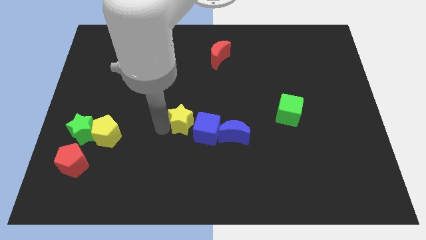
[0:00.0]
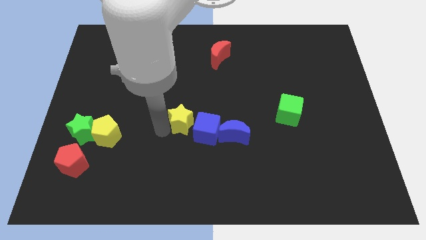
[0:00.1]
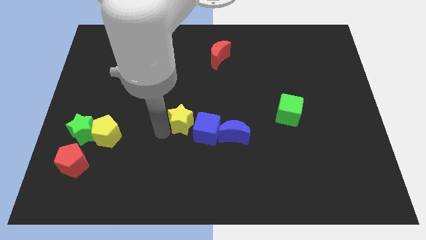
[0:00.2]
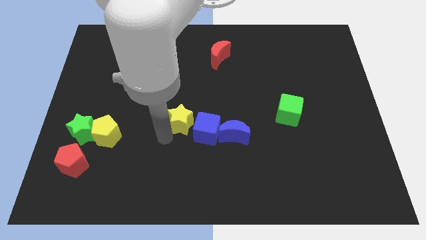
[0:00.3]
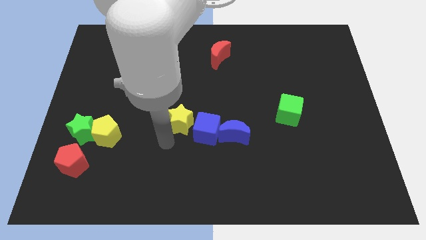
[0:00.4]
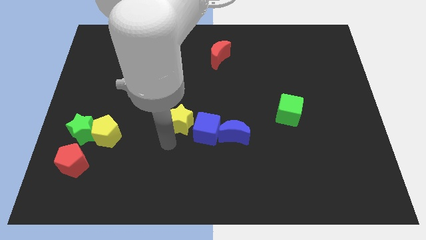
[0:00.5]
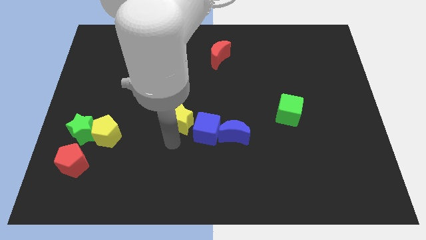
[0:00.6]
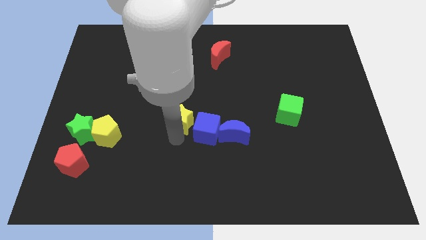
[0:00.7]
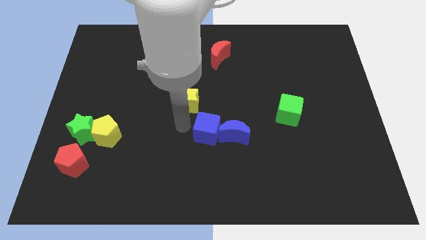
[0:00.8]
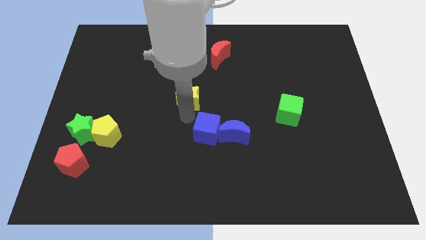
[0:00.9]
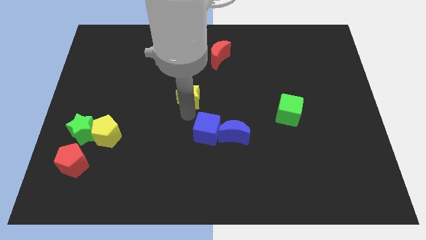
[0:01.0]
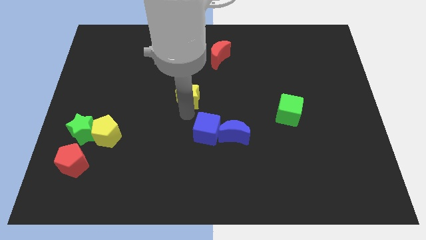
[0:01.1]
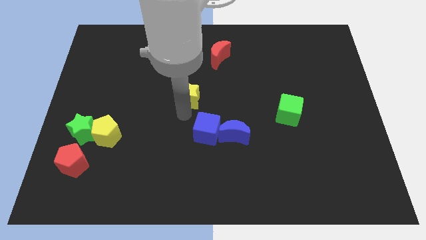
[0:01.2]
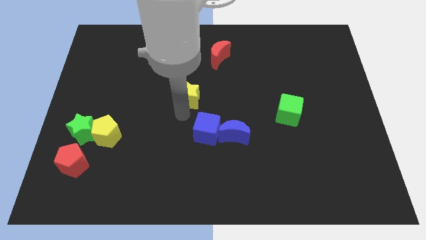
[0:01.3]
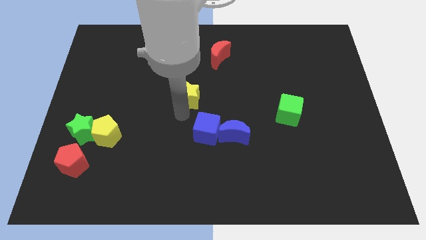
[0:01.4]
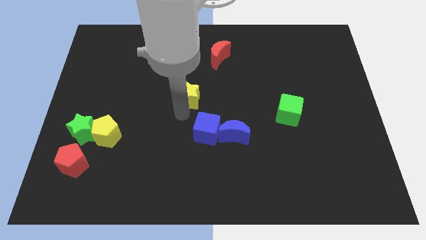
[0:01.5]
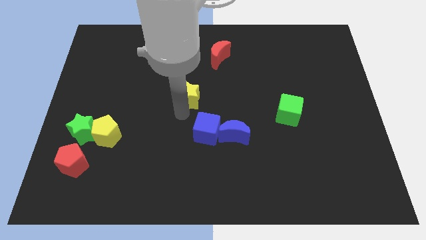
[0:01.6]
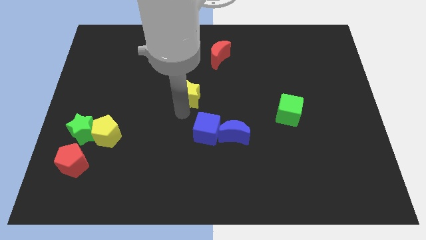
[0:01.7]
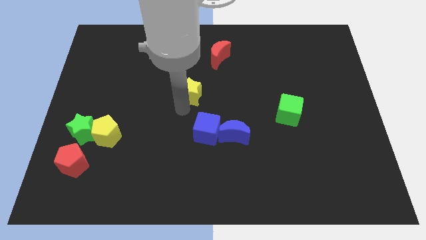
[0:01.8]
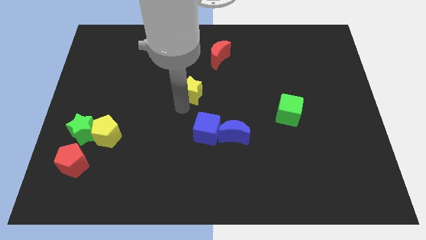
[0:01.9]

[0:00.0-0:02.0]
push the yellow star towards up

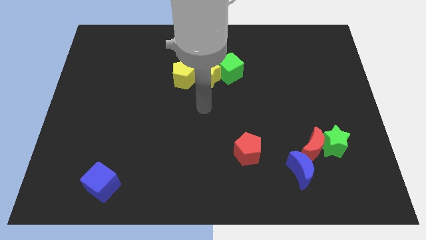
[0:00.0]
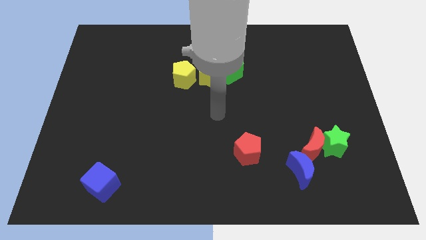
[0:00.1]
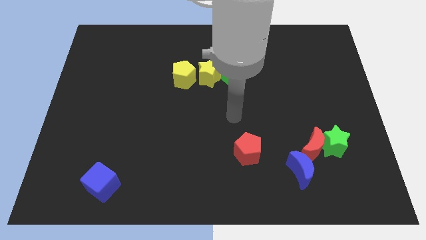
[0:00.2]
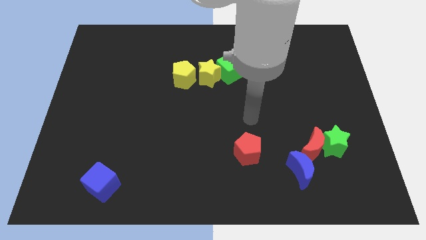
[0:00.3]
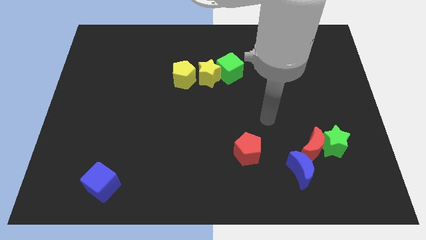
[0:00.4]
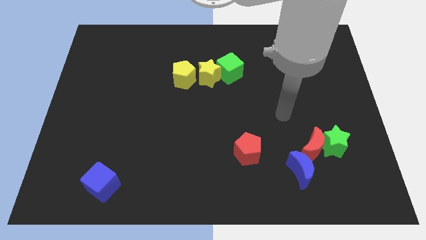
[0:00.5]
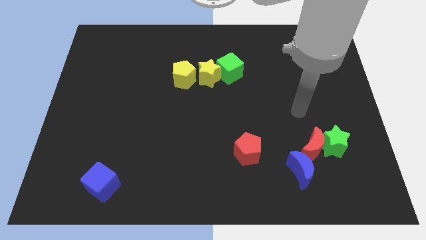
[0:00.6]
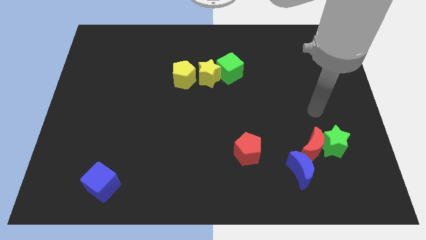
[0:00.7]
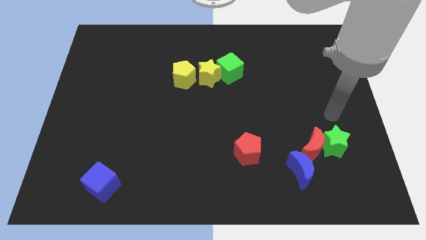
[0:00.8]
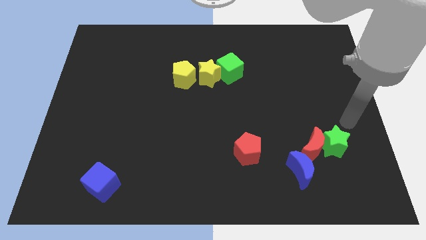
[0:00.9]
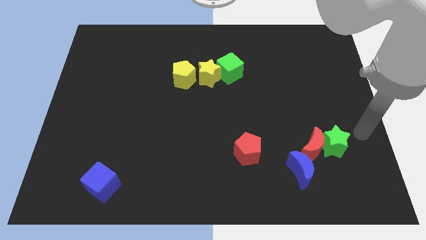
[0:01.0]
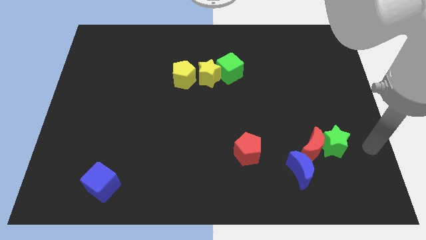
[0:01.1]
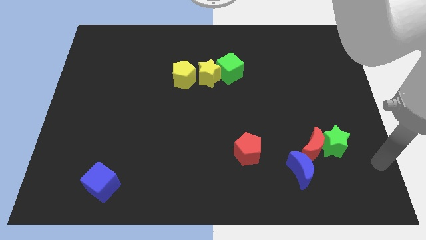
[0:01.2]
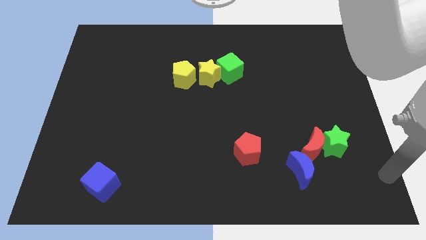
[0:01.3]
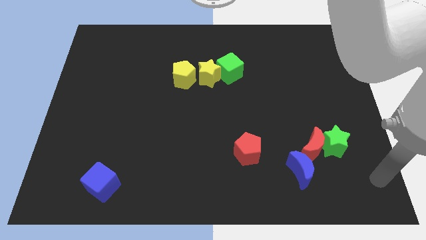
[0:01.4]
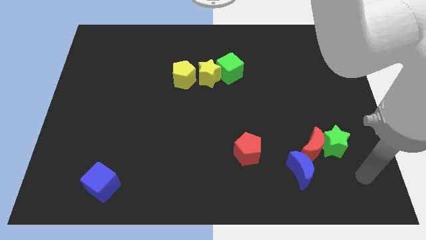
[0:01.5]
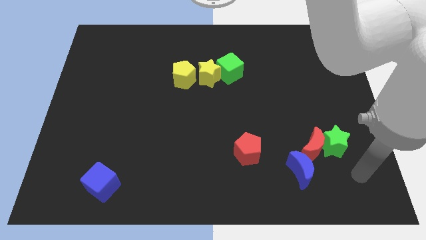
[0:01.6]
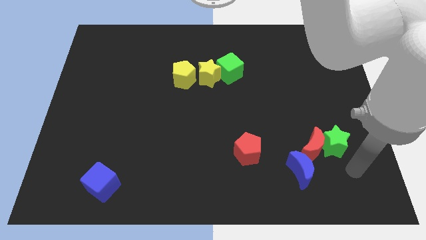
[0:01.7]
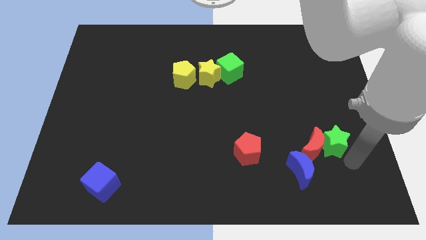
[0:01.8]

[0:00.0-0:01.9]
move your arm to the below the green star

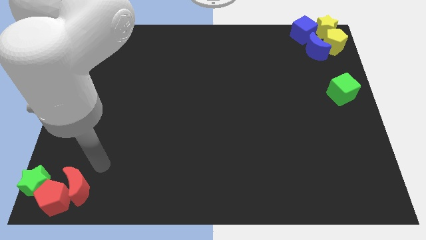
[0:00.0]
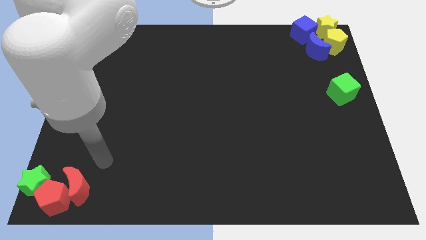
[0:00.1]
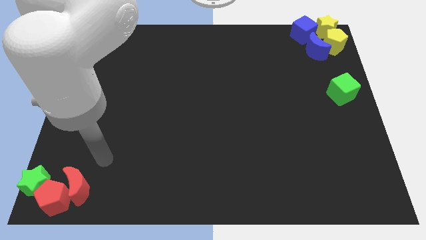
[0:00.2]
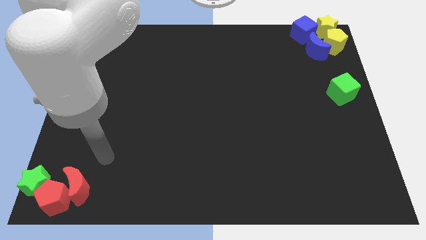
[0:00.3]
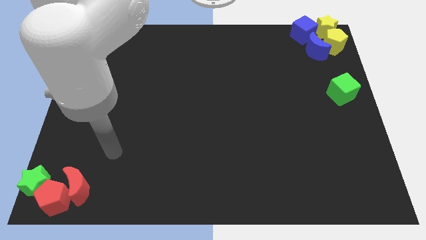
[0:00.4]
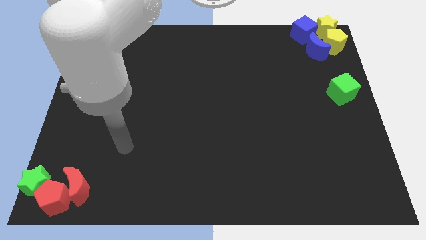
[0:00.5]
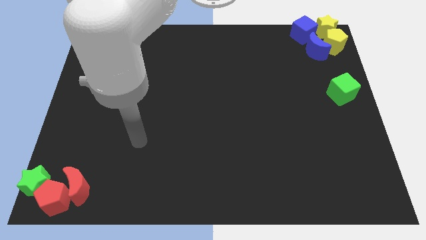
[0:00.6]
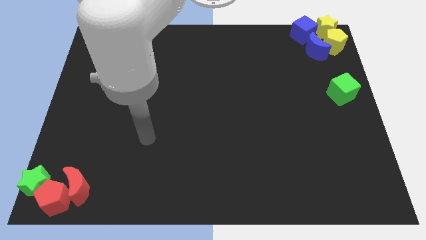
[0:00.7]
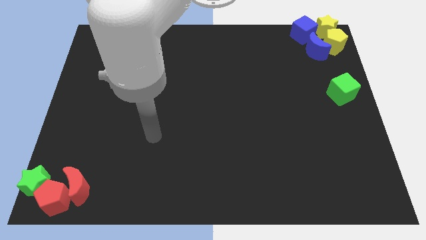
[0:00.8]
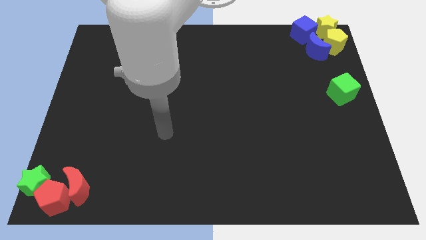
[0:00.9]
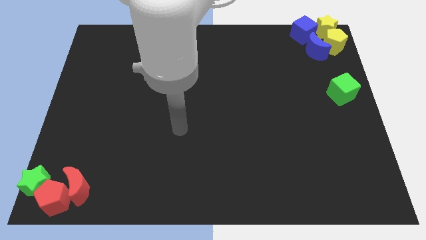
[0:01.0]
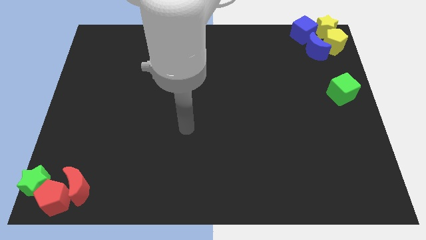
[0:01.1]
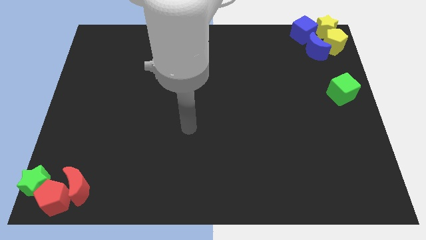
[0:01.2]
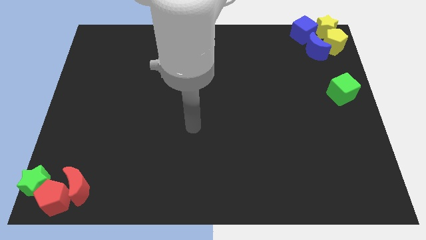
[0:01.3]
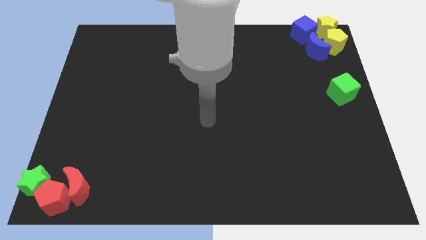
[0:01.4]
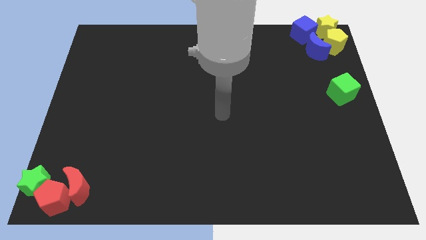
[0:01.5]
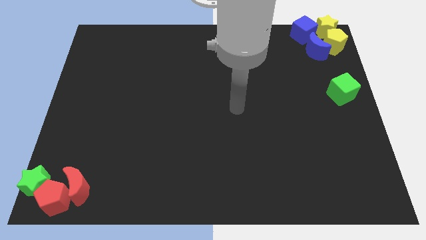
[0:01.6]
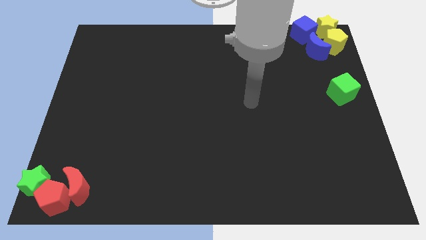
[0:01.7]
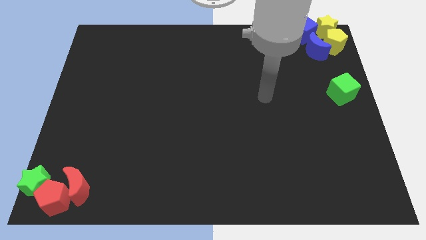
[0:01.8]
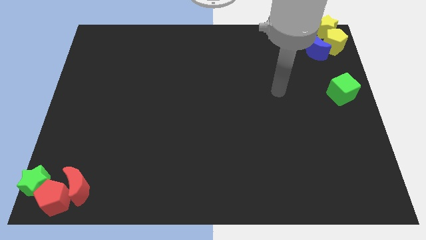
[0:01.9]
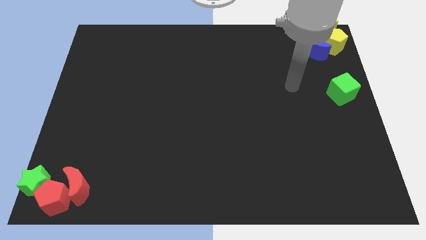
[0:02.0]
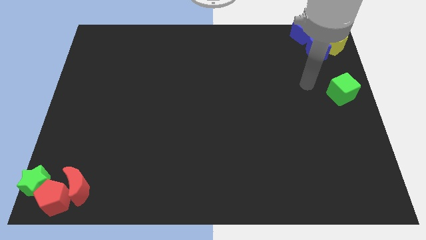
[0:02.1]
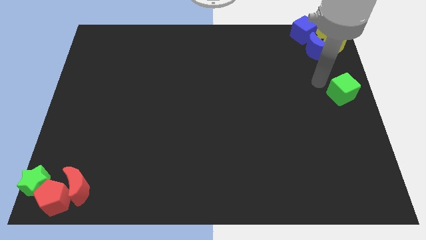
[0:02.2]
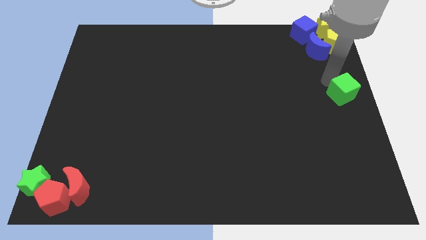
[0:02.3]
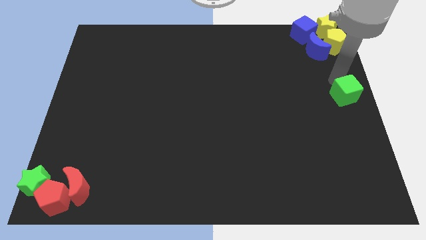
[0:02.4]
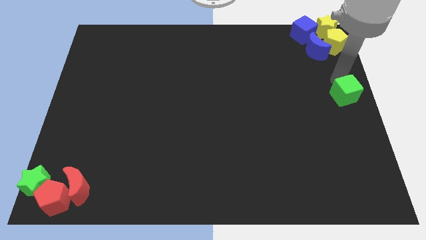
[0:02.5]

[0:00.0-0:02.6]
move your hand towards the green cube

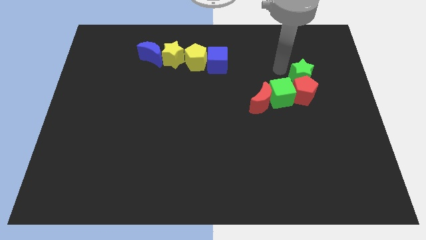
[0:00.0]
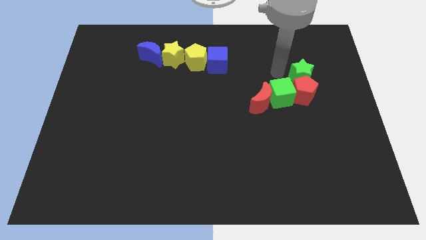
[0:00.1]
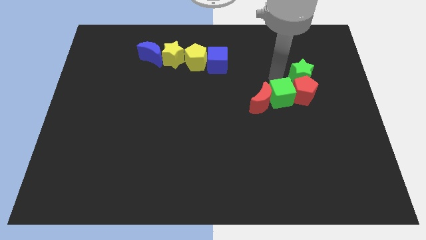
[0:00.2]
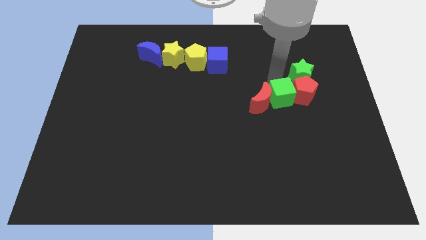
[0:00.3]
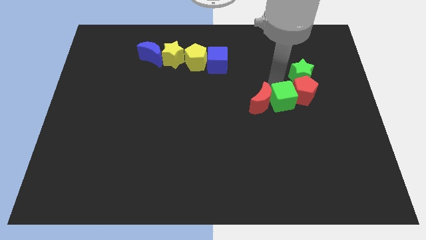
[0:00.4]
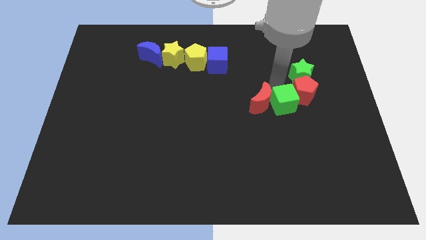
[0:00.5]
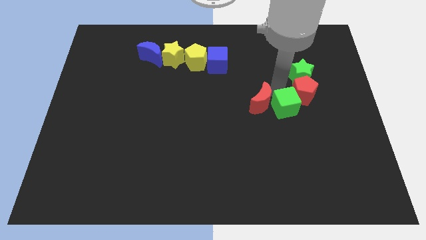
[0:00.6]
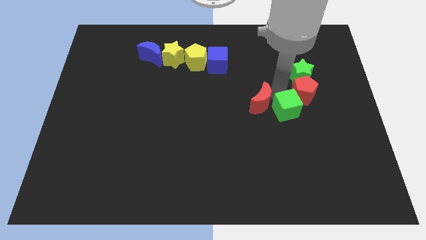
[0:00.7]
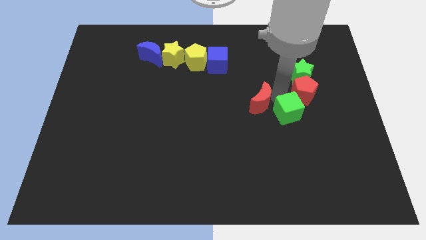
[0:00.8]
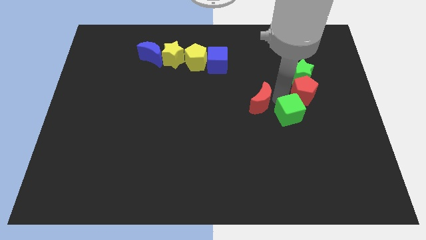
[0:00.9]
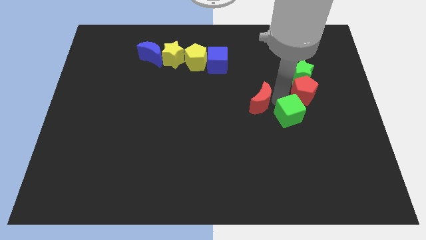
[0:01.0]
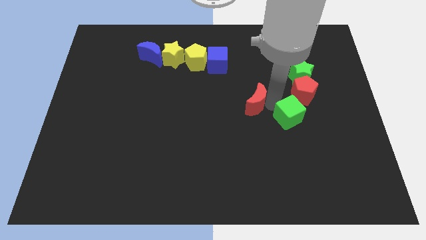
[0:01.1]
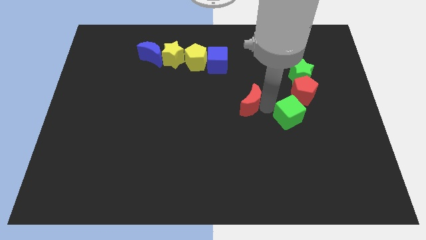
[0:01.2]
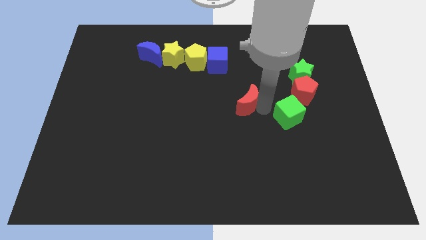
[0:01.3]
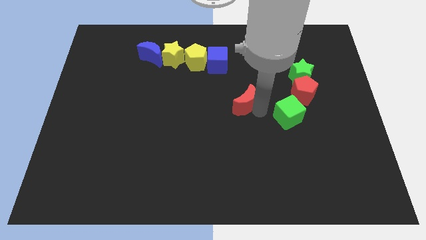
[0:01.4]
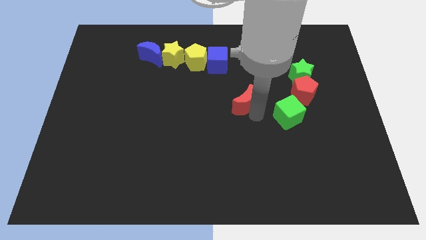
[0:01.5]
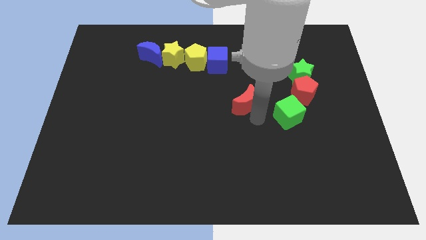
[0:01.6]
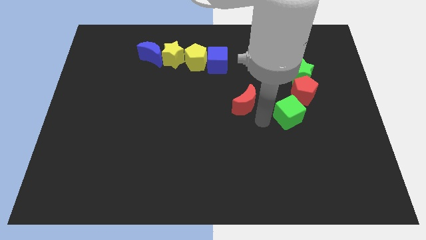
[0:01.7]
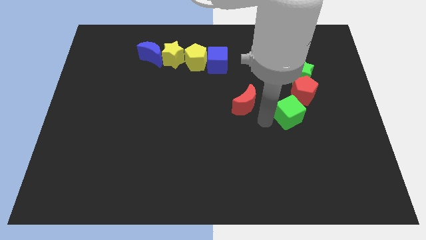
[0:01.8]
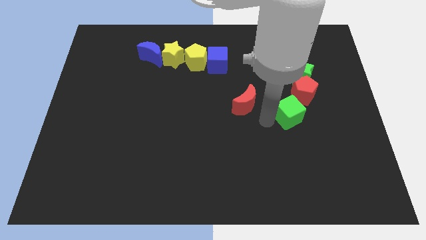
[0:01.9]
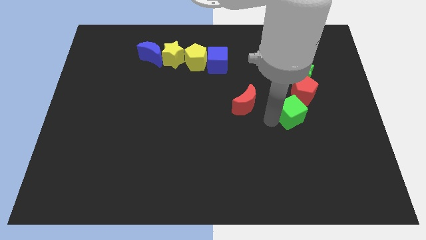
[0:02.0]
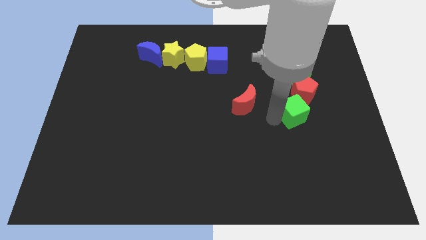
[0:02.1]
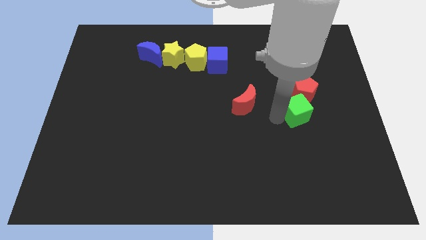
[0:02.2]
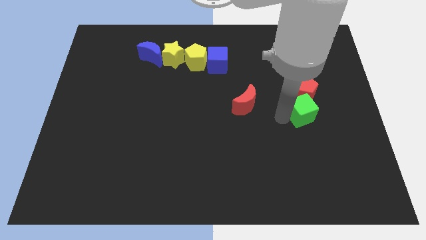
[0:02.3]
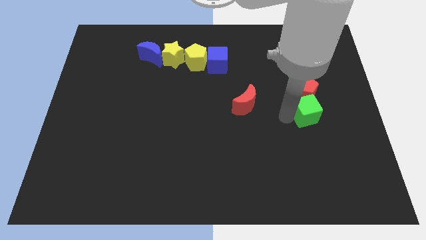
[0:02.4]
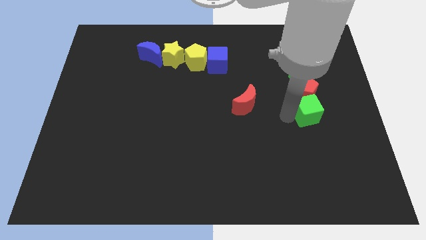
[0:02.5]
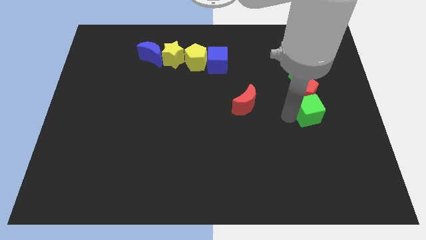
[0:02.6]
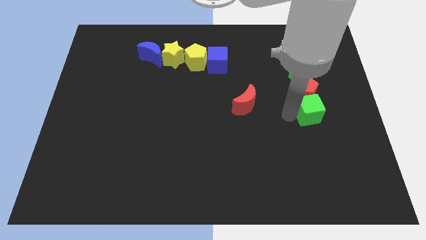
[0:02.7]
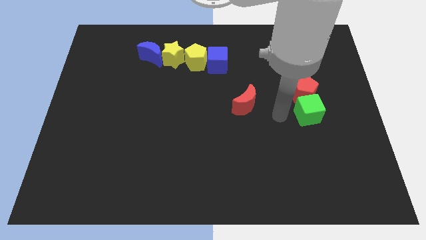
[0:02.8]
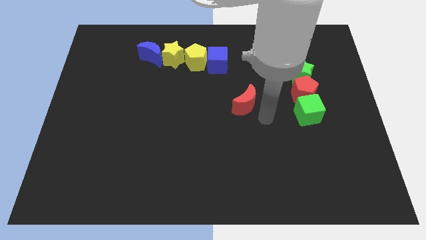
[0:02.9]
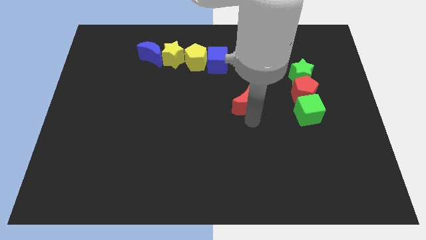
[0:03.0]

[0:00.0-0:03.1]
move the green cube to the bottom of the red pentagon
